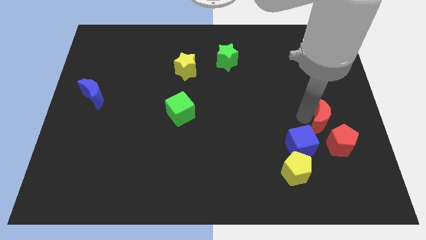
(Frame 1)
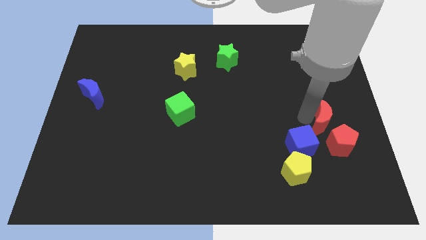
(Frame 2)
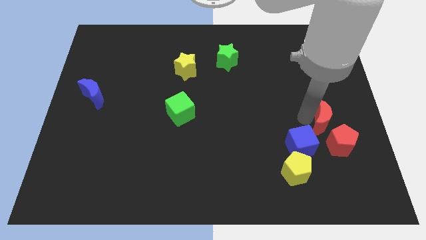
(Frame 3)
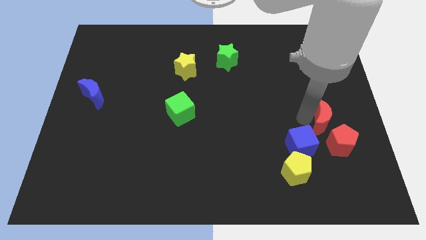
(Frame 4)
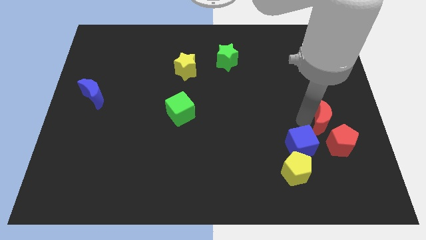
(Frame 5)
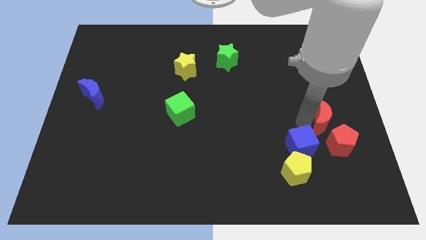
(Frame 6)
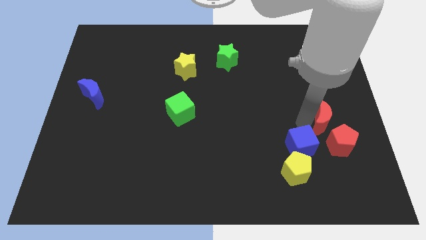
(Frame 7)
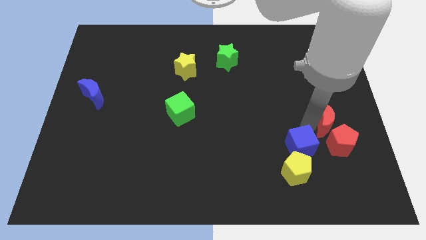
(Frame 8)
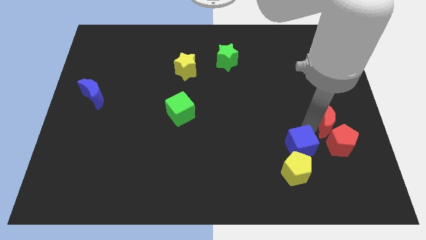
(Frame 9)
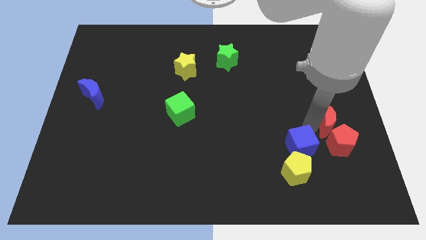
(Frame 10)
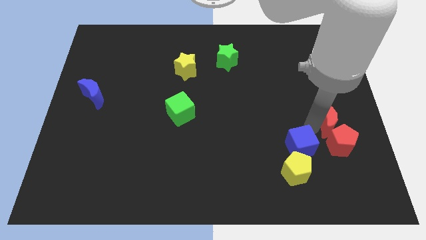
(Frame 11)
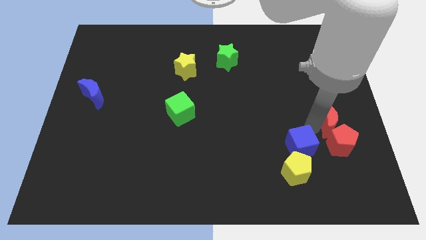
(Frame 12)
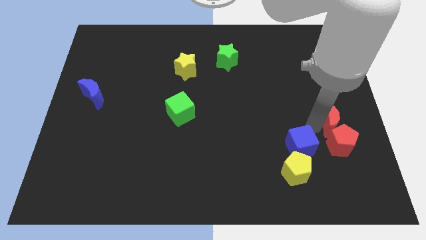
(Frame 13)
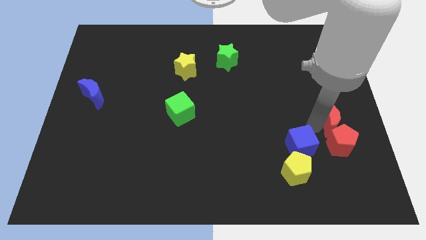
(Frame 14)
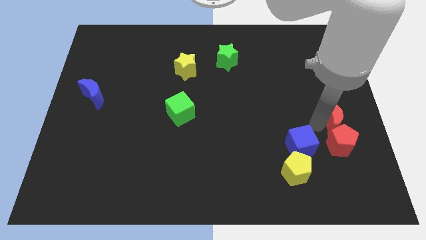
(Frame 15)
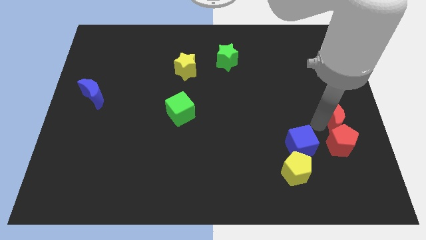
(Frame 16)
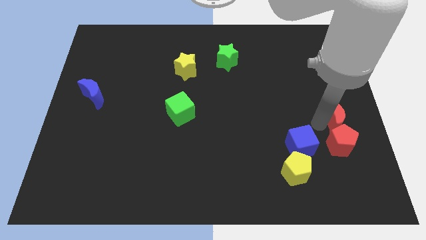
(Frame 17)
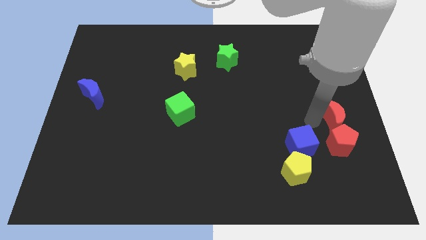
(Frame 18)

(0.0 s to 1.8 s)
drag the red crescent into the top side of the red pentagon

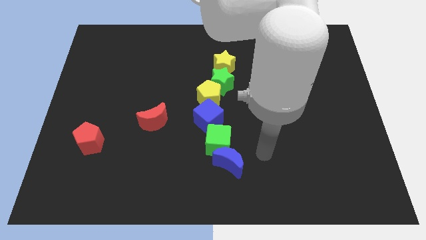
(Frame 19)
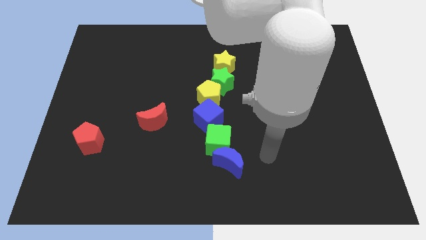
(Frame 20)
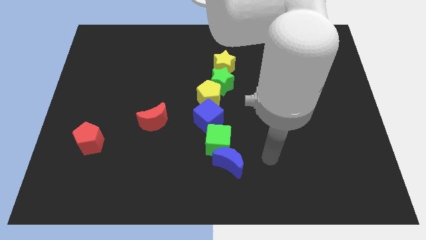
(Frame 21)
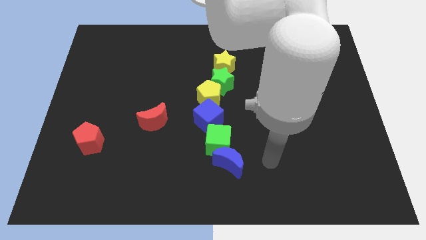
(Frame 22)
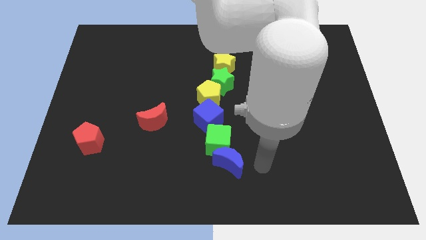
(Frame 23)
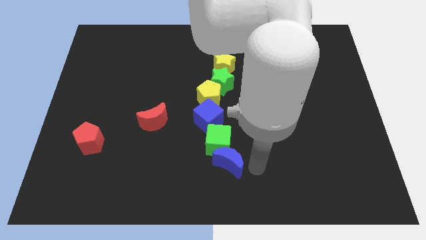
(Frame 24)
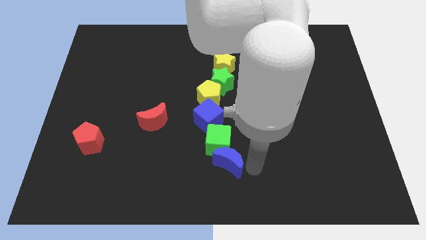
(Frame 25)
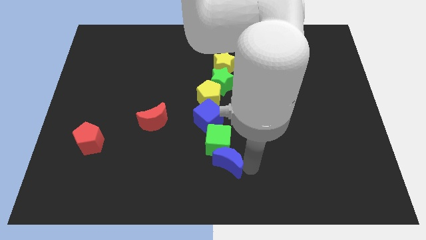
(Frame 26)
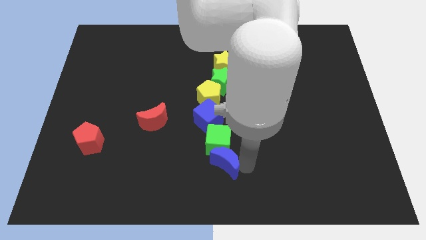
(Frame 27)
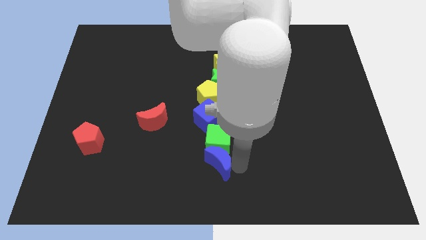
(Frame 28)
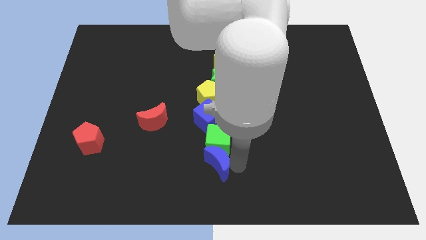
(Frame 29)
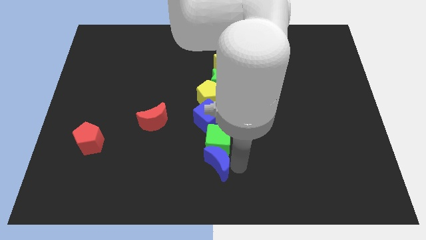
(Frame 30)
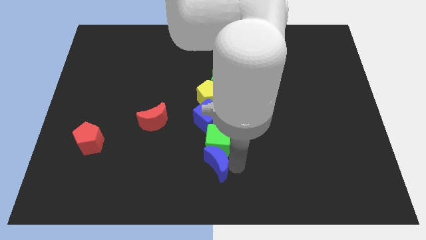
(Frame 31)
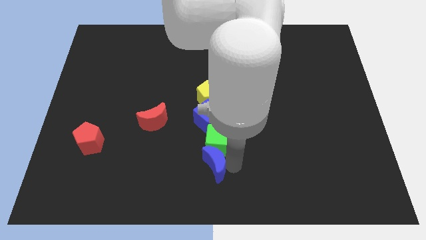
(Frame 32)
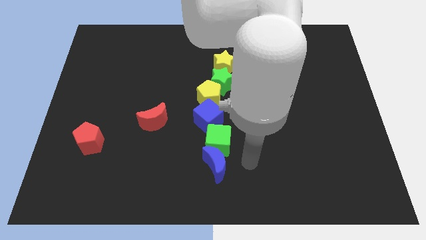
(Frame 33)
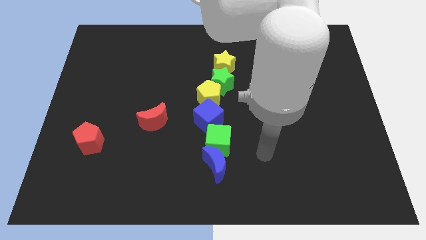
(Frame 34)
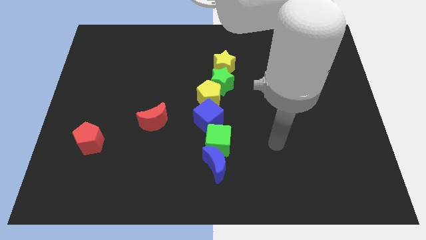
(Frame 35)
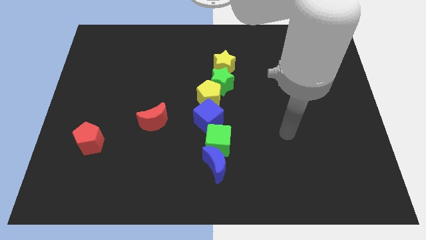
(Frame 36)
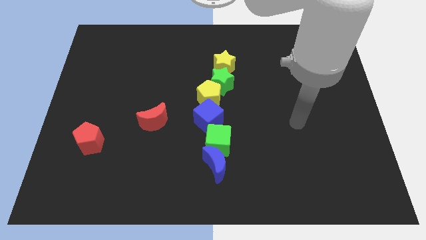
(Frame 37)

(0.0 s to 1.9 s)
slide the blue moon vertically below the green cube

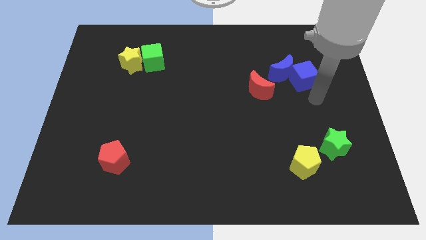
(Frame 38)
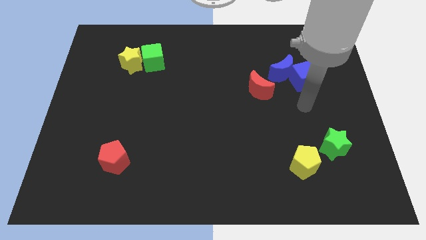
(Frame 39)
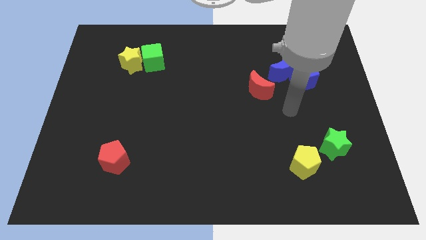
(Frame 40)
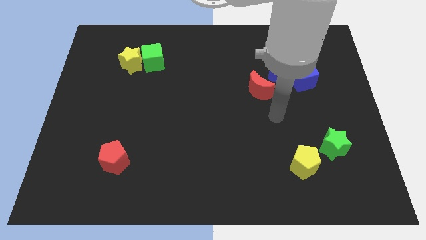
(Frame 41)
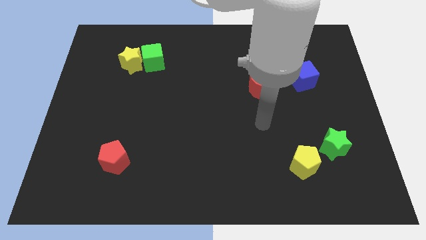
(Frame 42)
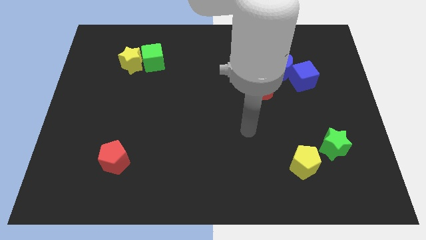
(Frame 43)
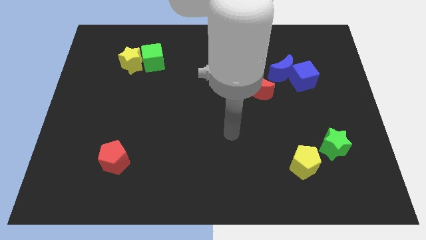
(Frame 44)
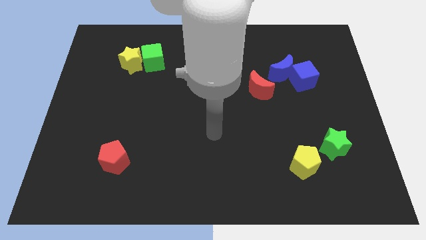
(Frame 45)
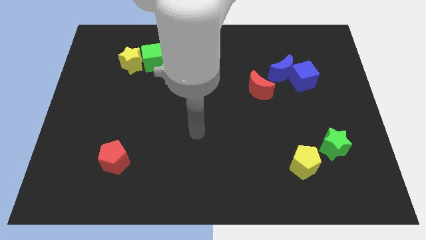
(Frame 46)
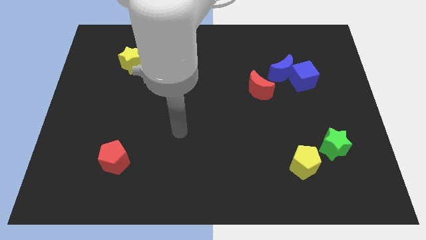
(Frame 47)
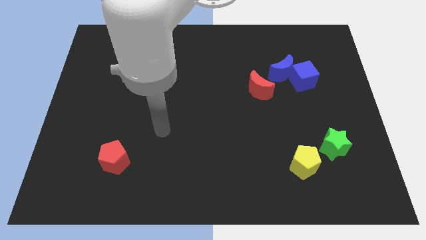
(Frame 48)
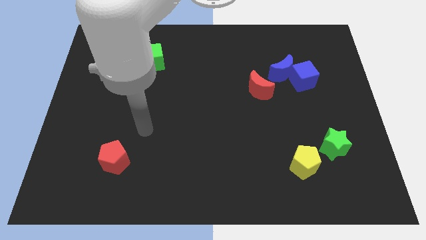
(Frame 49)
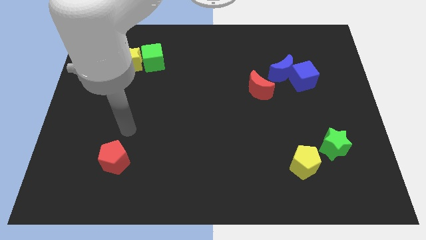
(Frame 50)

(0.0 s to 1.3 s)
place your arm at the top side of the red pentagon

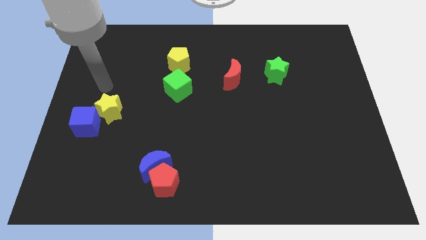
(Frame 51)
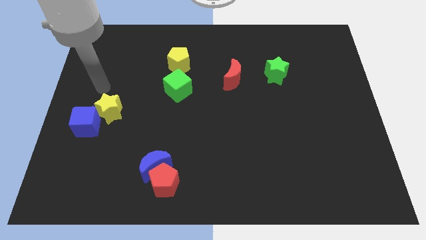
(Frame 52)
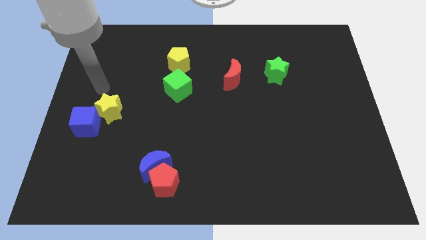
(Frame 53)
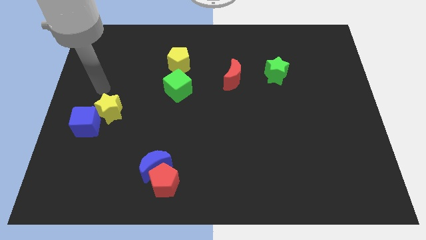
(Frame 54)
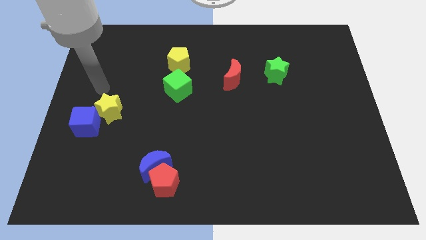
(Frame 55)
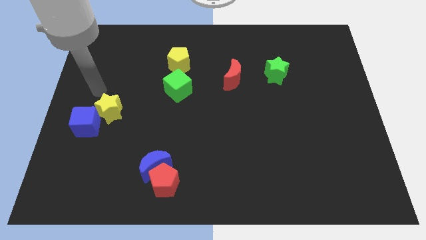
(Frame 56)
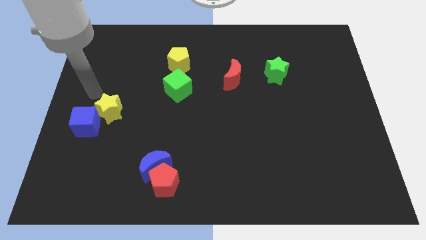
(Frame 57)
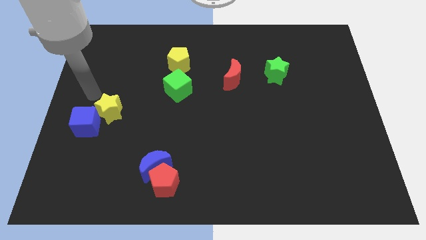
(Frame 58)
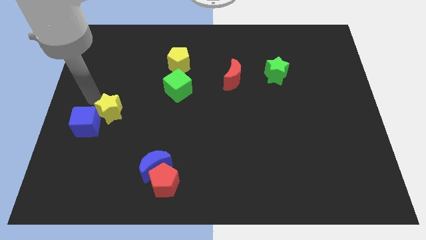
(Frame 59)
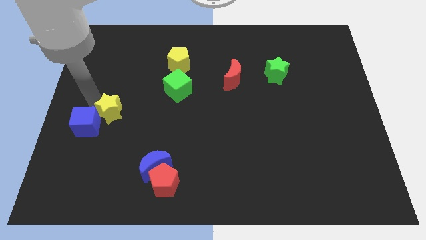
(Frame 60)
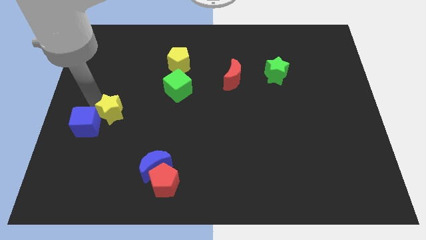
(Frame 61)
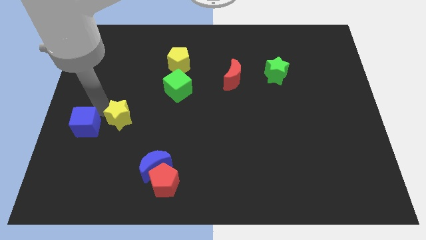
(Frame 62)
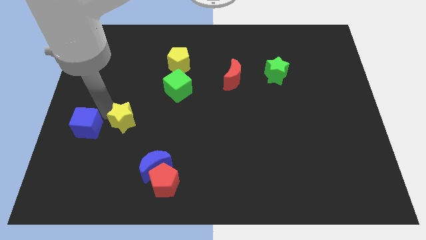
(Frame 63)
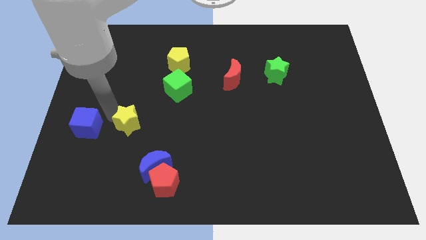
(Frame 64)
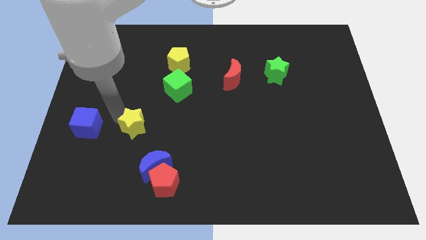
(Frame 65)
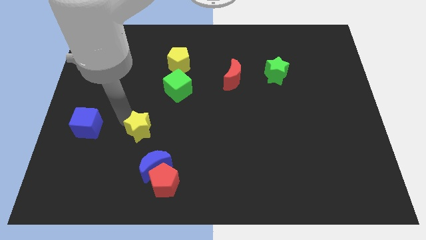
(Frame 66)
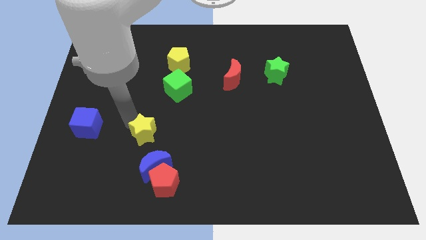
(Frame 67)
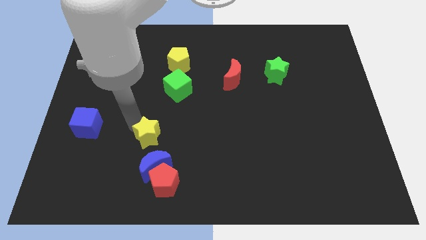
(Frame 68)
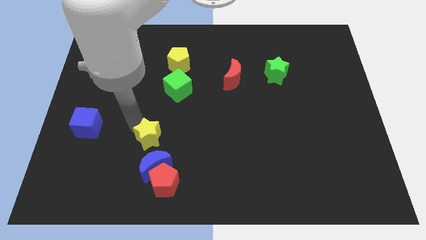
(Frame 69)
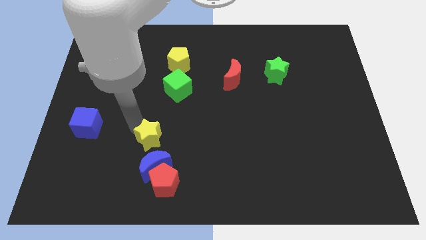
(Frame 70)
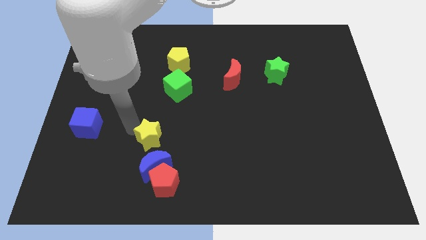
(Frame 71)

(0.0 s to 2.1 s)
separate yellow star from blue cube

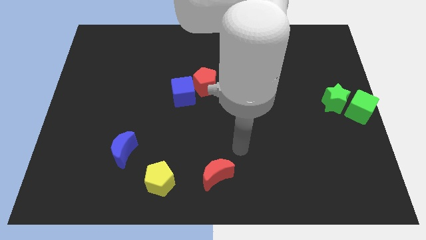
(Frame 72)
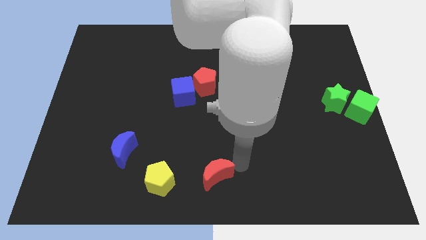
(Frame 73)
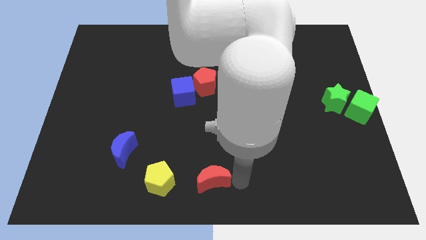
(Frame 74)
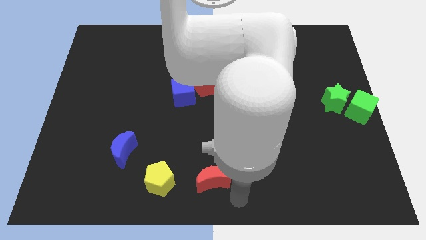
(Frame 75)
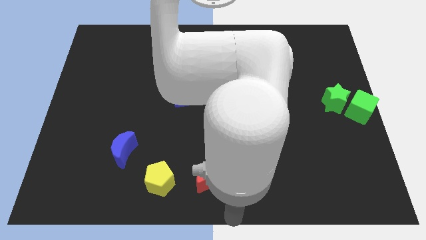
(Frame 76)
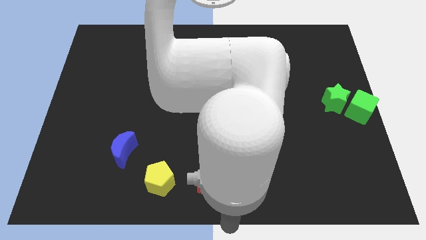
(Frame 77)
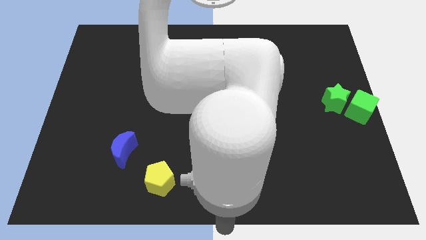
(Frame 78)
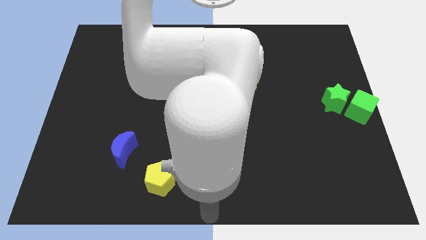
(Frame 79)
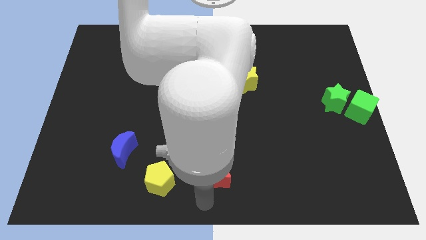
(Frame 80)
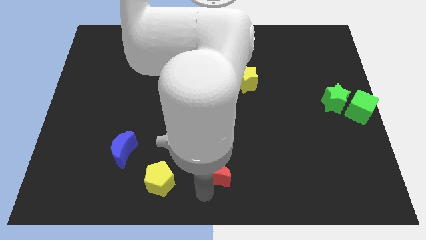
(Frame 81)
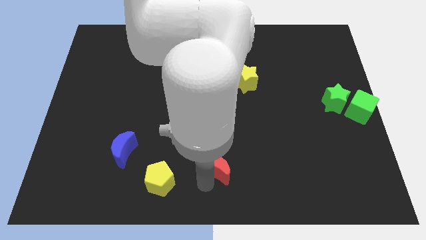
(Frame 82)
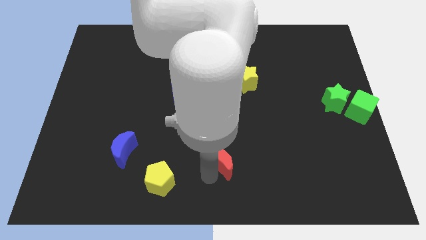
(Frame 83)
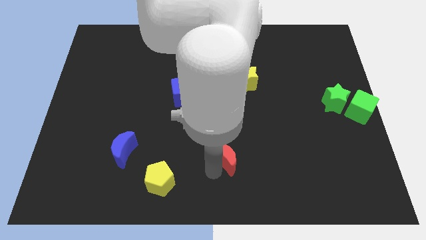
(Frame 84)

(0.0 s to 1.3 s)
slightly move the red crescent up a bit

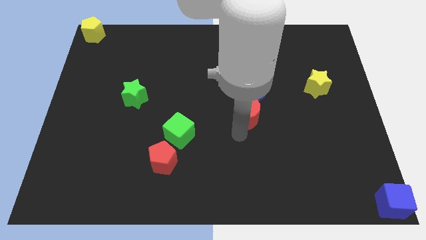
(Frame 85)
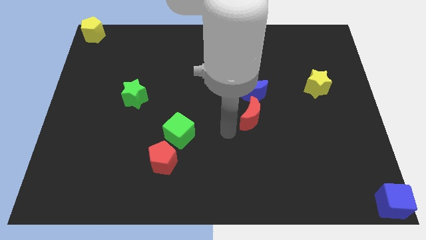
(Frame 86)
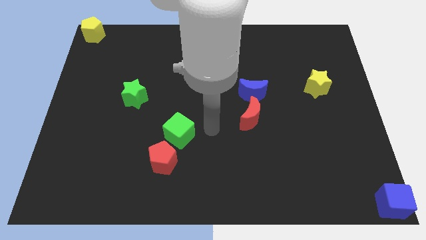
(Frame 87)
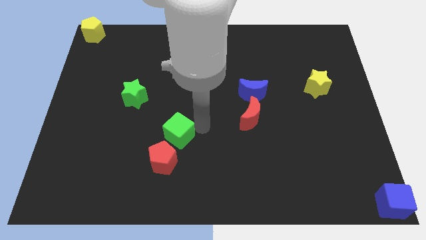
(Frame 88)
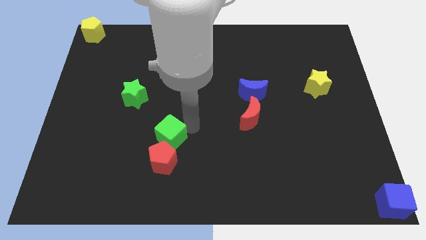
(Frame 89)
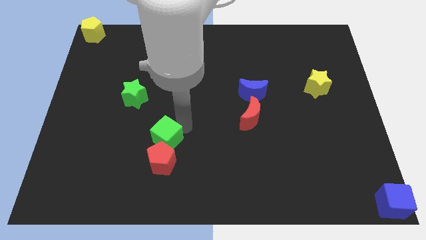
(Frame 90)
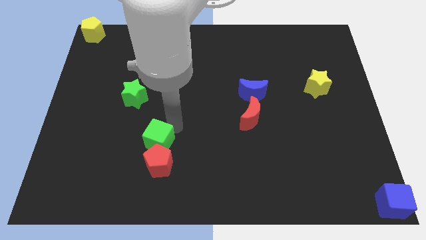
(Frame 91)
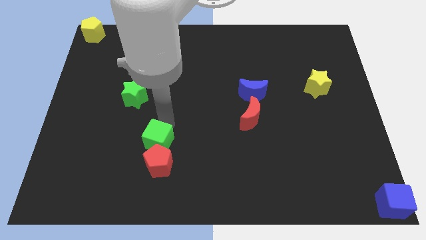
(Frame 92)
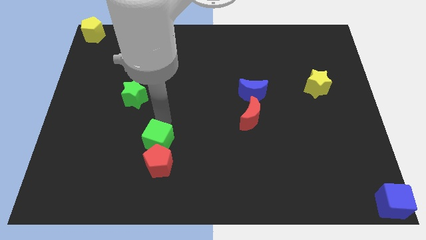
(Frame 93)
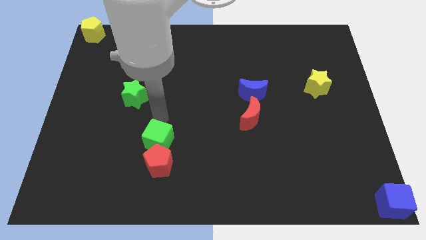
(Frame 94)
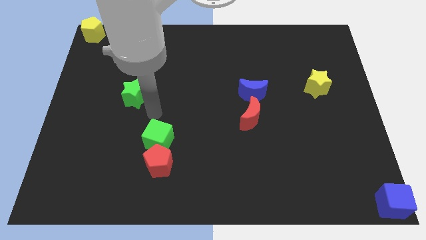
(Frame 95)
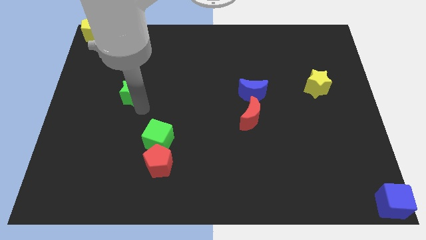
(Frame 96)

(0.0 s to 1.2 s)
put the green cube on the top of the red pentagon
